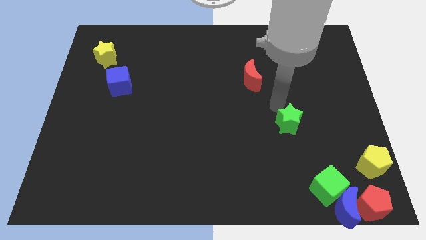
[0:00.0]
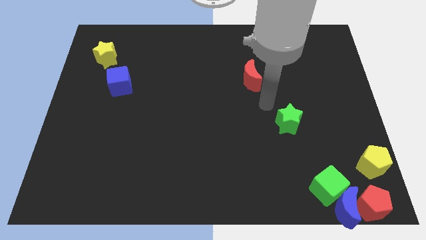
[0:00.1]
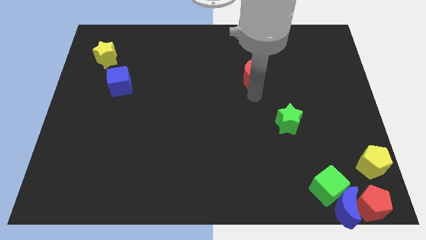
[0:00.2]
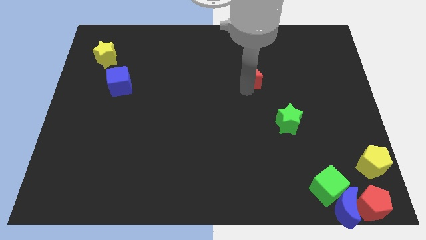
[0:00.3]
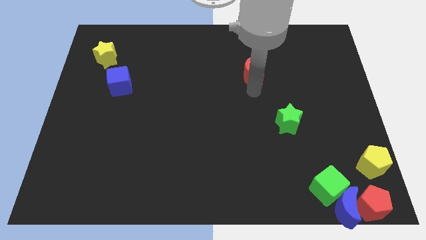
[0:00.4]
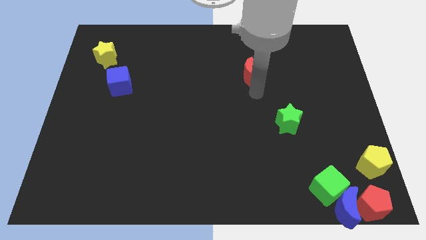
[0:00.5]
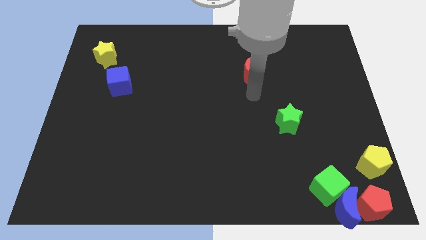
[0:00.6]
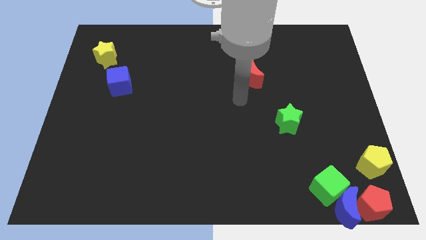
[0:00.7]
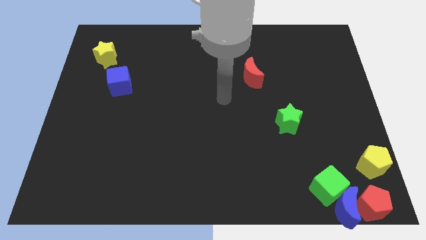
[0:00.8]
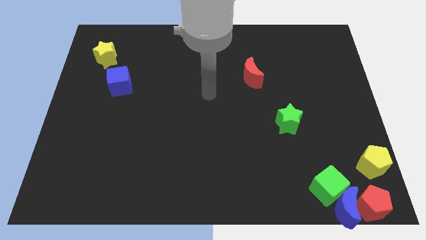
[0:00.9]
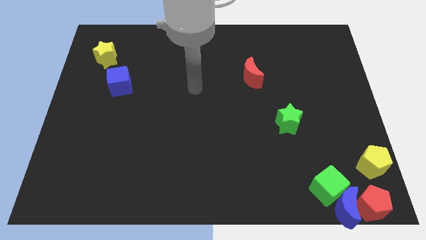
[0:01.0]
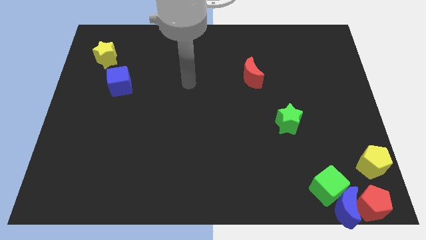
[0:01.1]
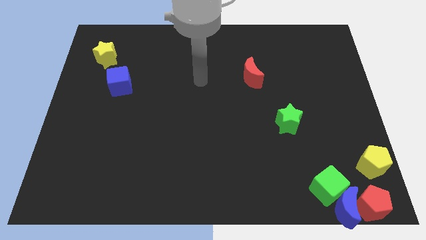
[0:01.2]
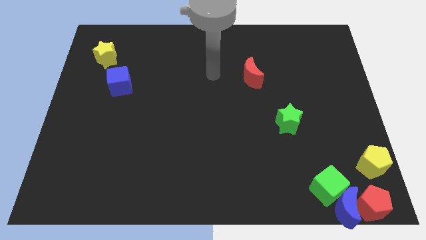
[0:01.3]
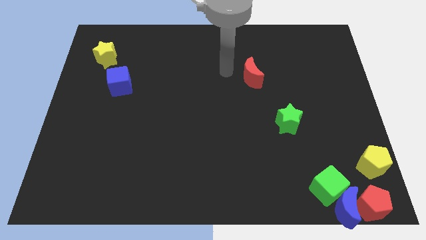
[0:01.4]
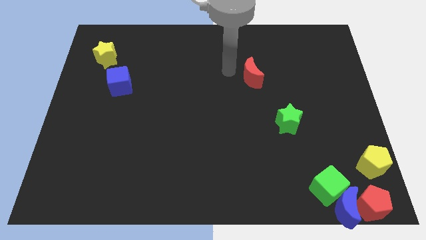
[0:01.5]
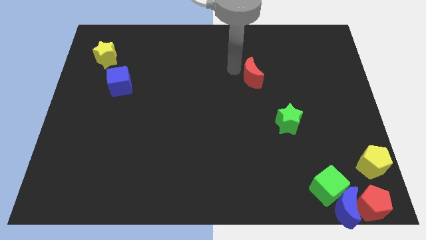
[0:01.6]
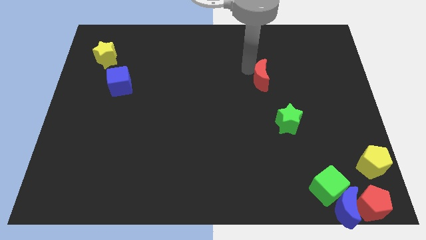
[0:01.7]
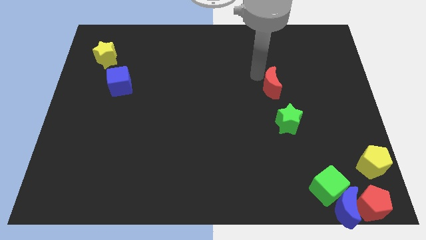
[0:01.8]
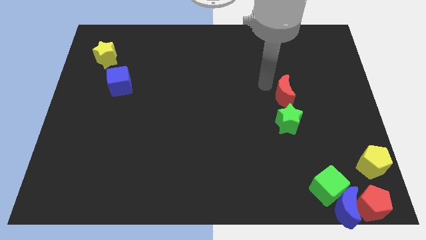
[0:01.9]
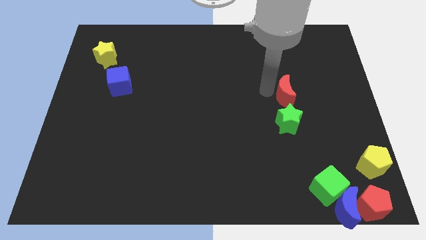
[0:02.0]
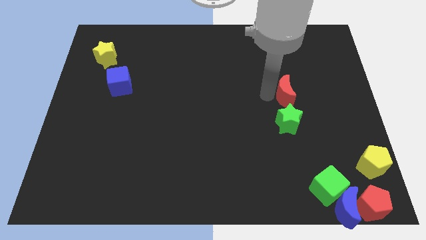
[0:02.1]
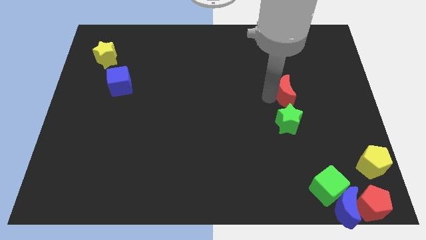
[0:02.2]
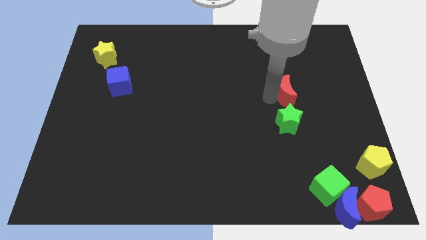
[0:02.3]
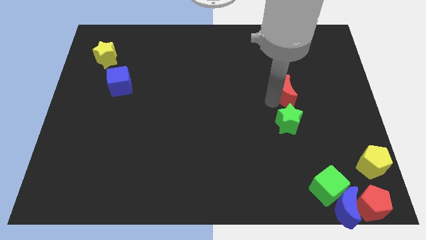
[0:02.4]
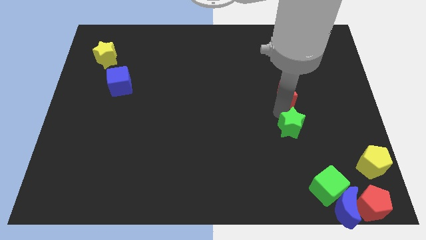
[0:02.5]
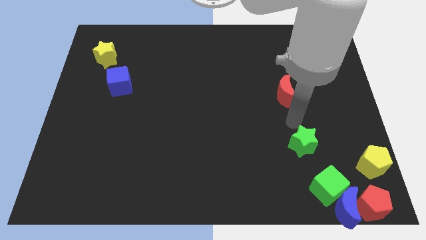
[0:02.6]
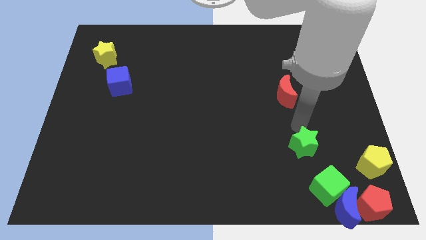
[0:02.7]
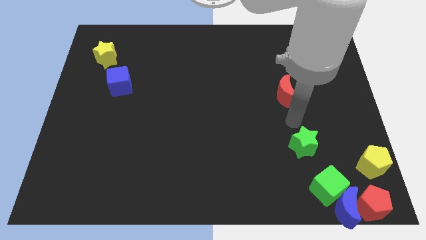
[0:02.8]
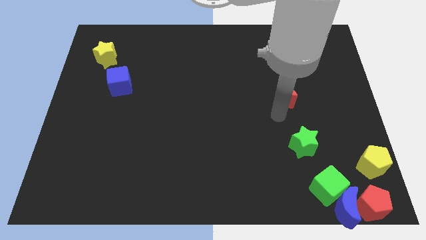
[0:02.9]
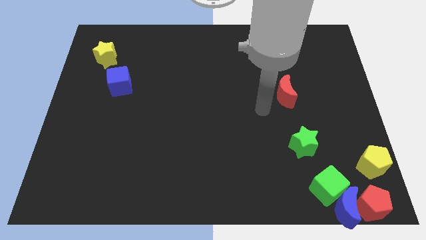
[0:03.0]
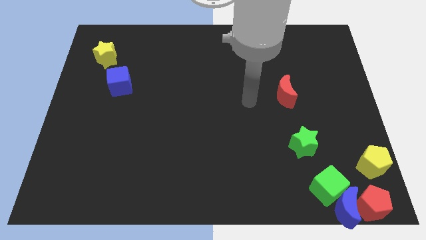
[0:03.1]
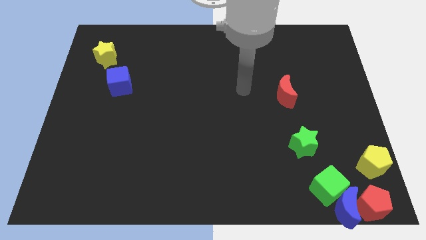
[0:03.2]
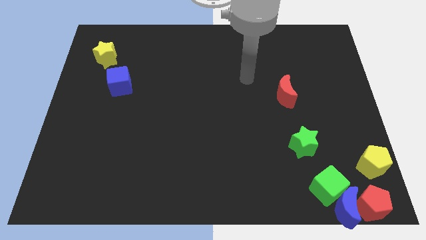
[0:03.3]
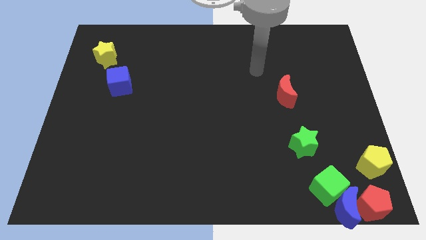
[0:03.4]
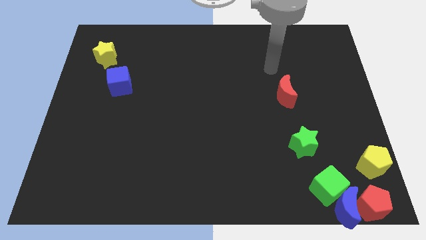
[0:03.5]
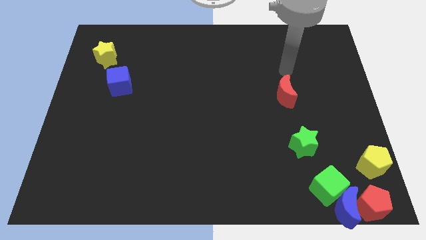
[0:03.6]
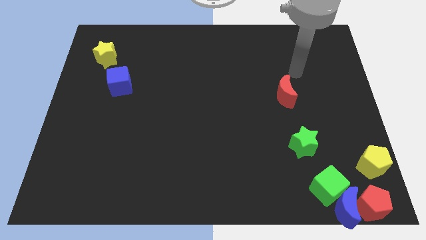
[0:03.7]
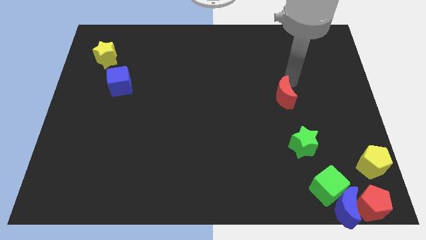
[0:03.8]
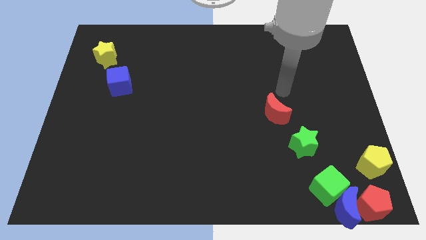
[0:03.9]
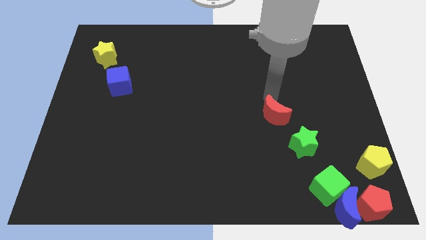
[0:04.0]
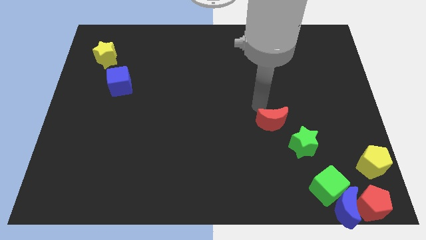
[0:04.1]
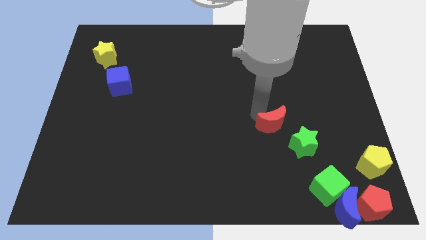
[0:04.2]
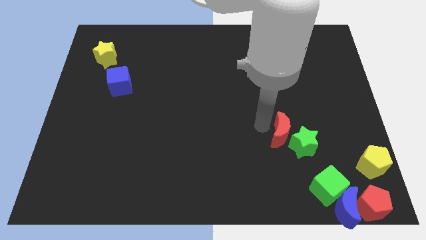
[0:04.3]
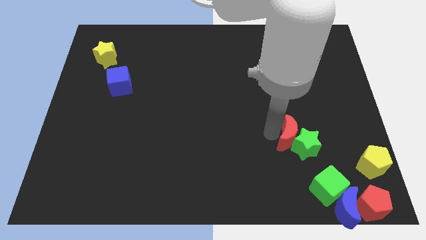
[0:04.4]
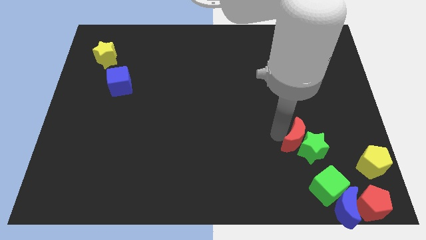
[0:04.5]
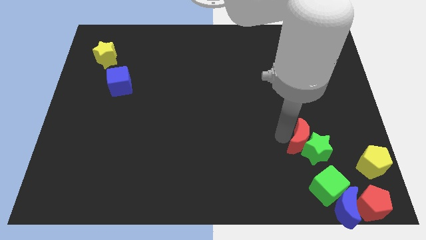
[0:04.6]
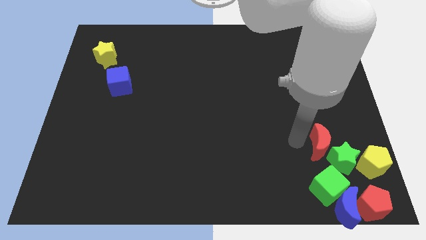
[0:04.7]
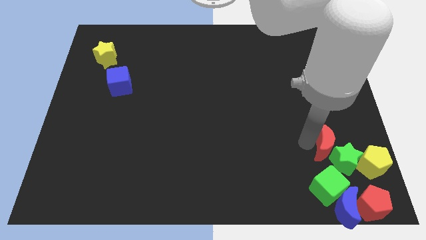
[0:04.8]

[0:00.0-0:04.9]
push the red crescent and the green star to the left of the yellow pentagon

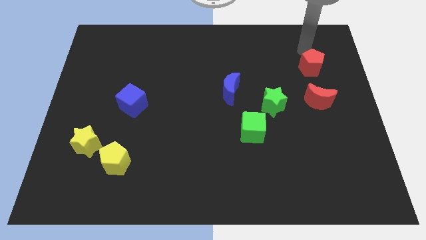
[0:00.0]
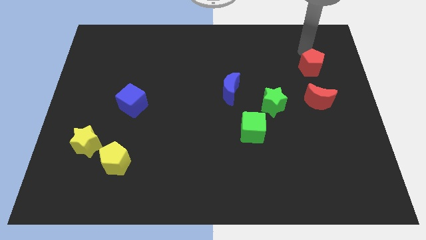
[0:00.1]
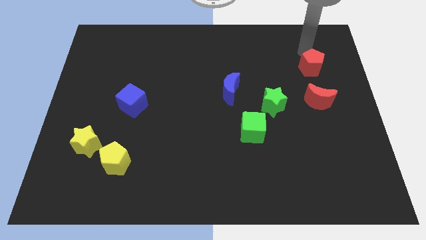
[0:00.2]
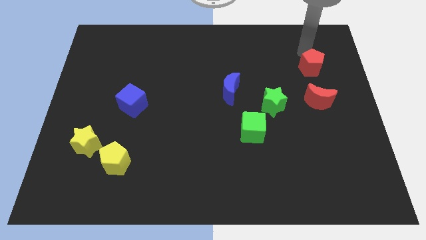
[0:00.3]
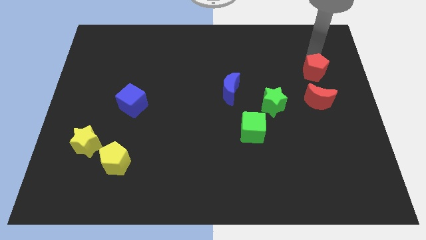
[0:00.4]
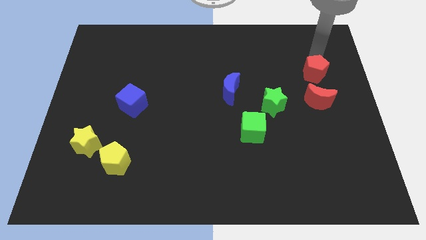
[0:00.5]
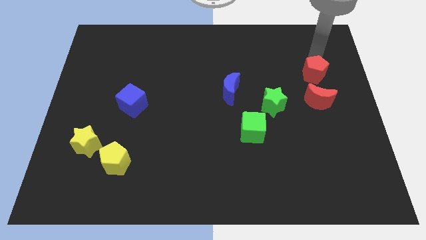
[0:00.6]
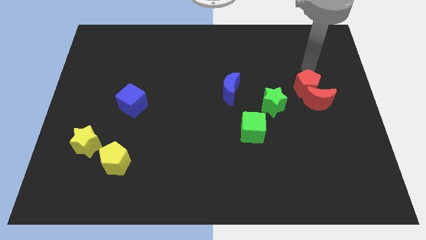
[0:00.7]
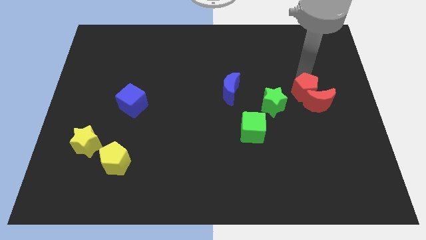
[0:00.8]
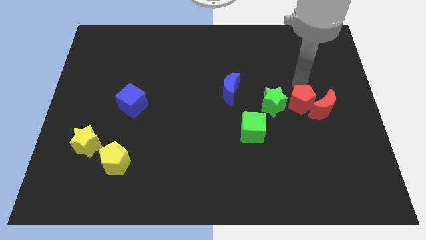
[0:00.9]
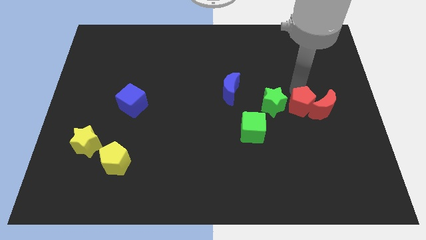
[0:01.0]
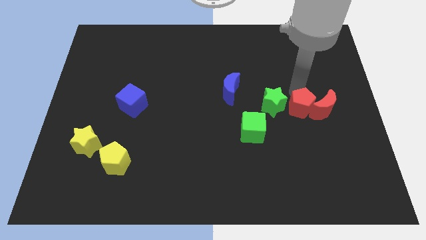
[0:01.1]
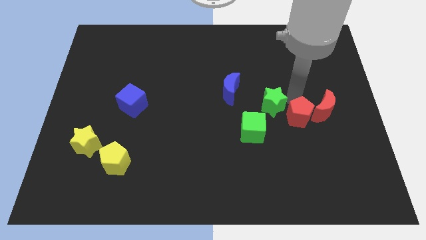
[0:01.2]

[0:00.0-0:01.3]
place red pentagon in between green star and red moon

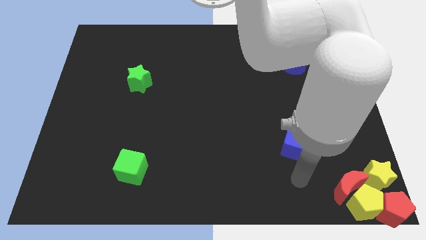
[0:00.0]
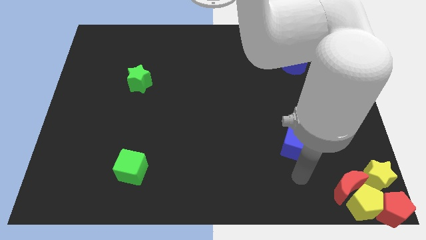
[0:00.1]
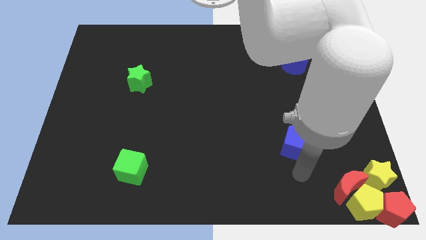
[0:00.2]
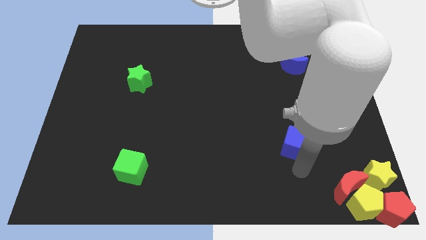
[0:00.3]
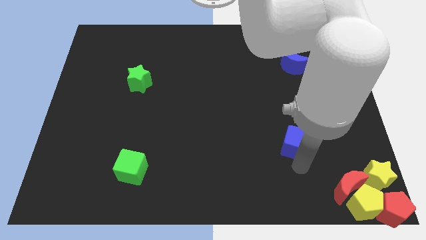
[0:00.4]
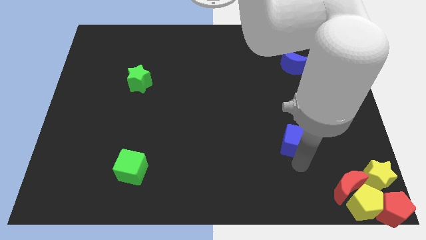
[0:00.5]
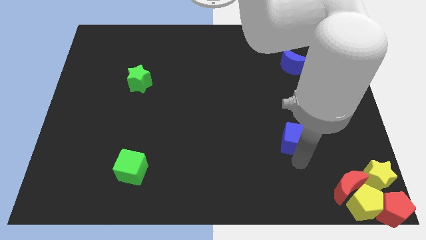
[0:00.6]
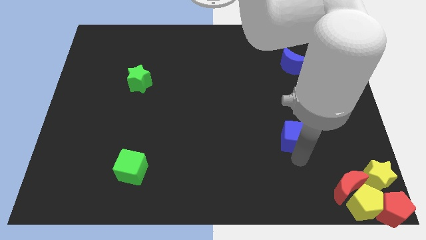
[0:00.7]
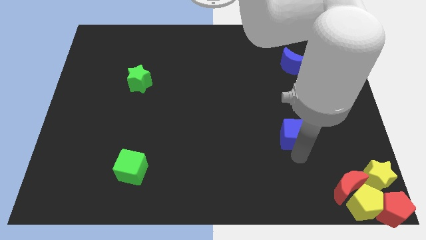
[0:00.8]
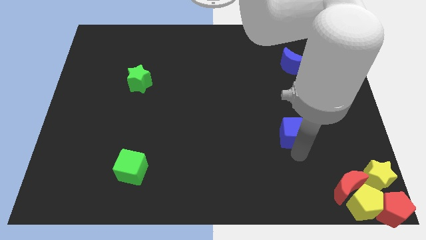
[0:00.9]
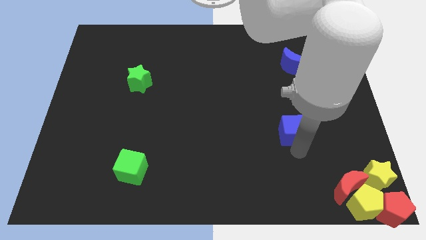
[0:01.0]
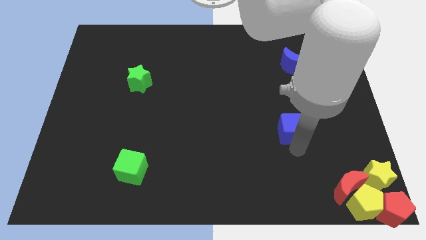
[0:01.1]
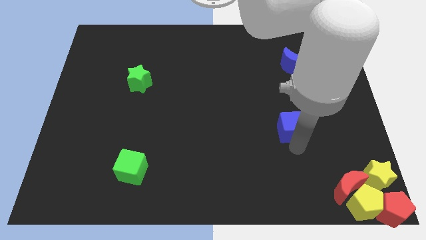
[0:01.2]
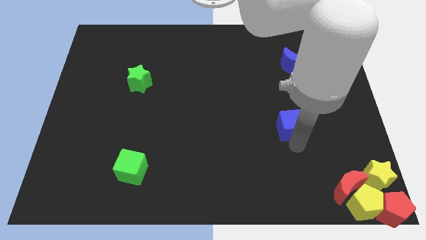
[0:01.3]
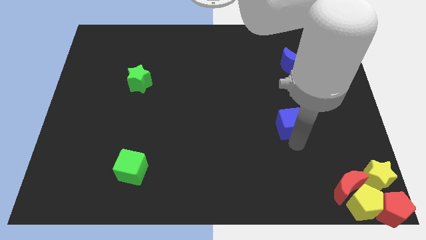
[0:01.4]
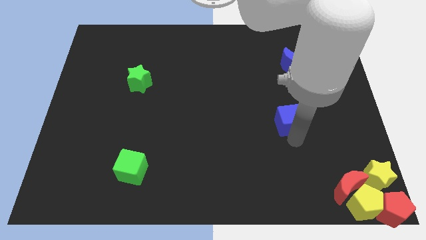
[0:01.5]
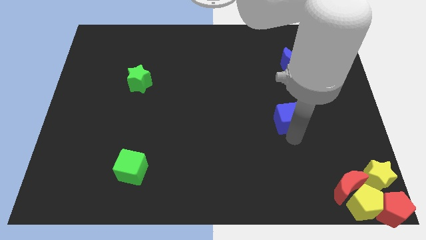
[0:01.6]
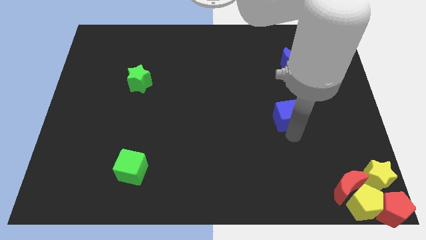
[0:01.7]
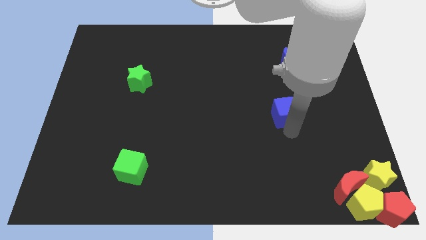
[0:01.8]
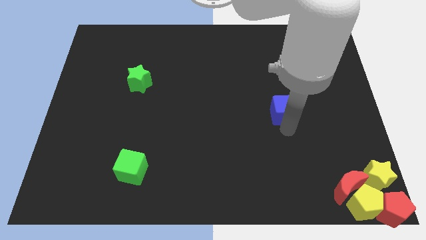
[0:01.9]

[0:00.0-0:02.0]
move blue cube slightly to the top side of the board

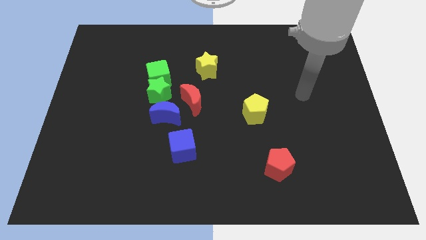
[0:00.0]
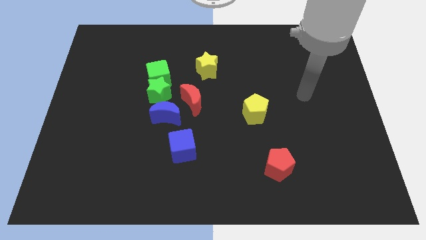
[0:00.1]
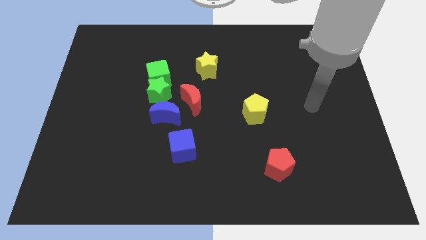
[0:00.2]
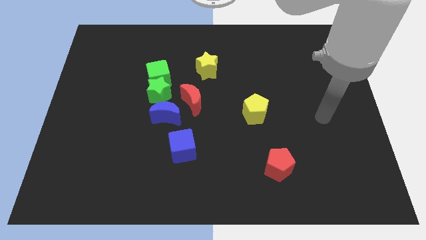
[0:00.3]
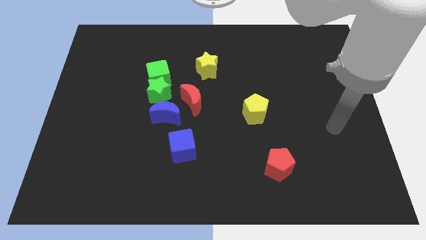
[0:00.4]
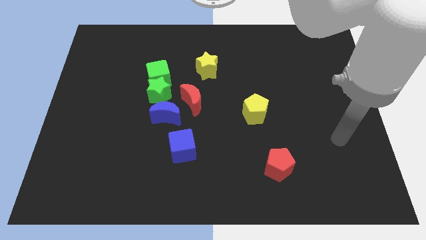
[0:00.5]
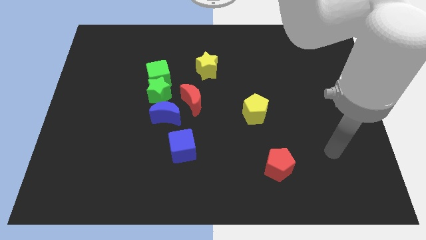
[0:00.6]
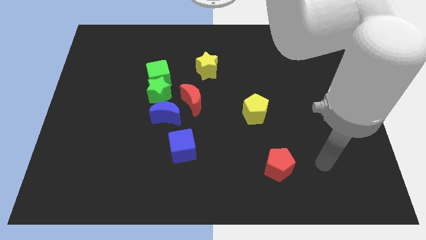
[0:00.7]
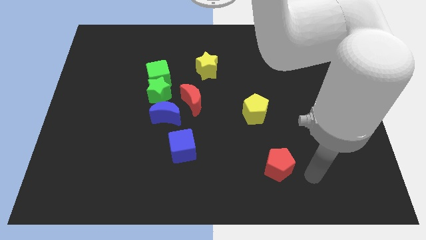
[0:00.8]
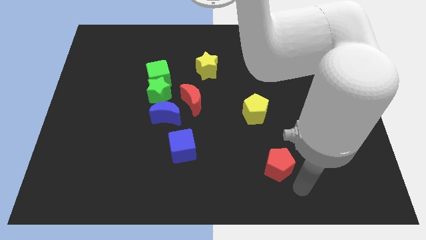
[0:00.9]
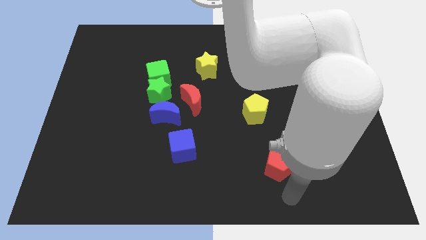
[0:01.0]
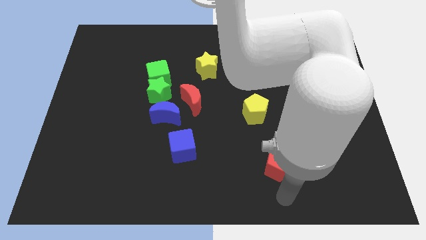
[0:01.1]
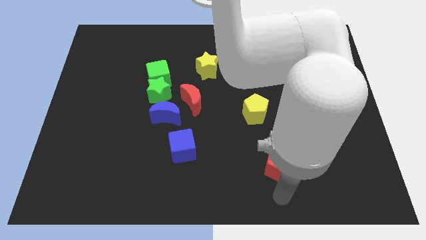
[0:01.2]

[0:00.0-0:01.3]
go and point your arm at the bottom side of the red pentagon
